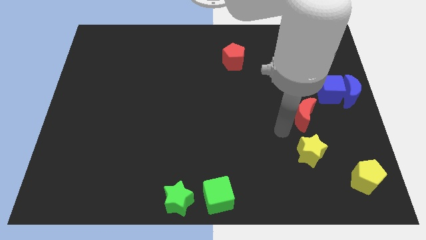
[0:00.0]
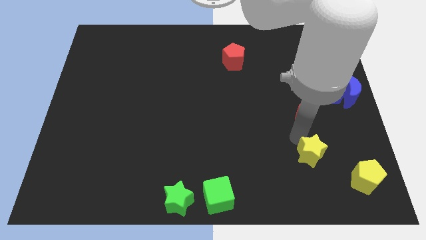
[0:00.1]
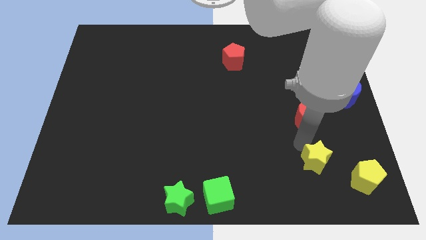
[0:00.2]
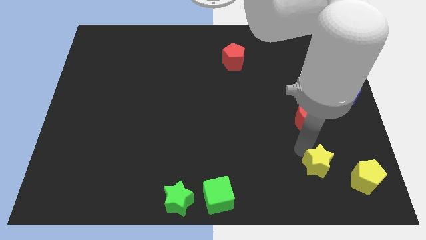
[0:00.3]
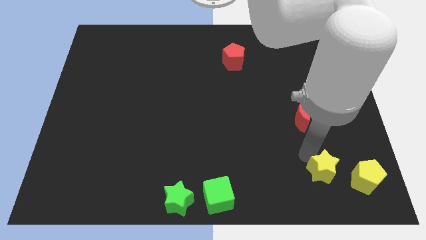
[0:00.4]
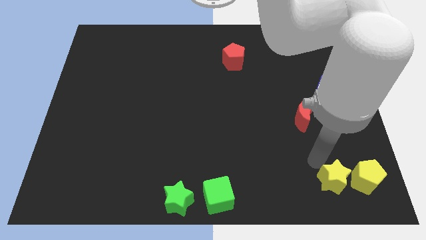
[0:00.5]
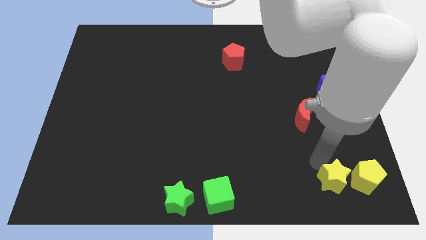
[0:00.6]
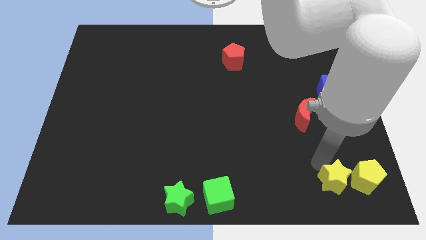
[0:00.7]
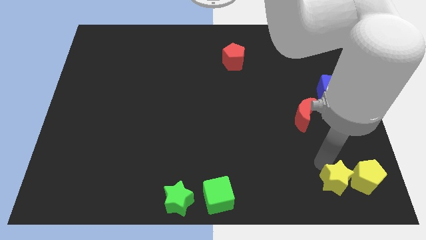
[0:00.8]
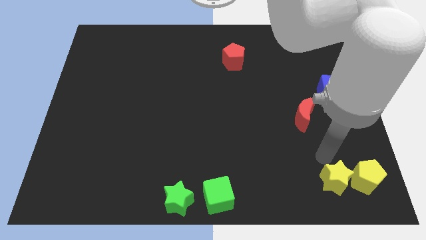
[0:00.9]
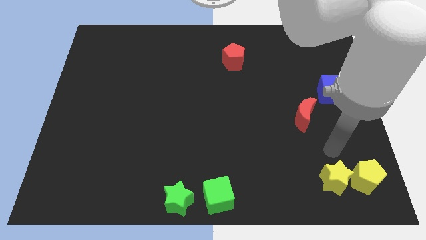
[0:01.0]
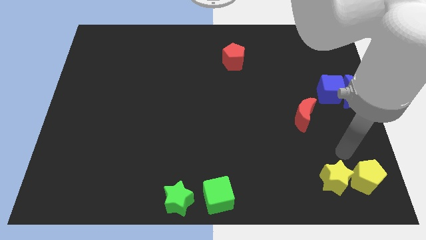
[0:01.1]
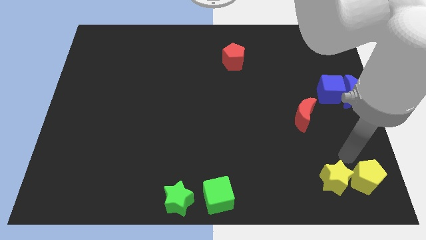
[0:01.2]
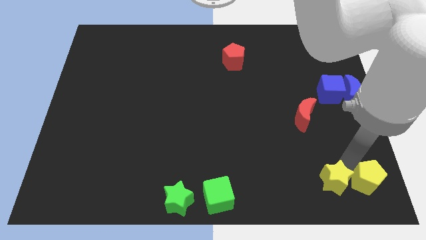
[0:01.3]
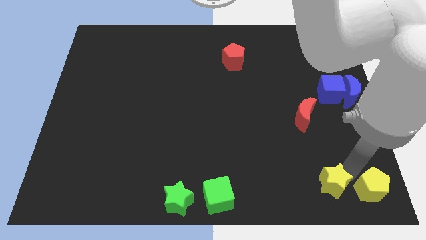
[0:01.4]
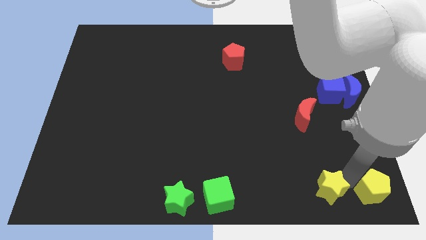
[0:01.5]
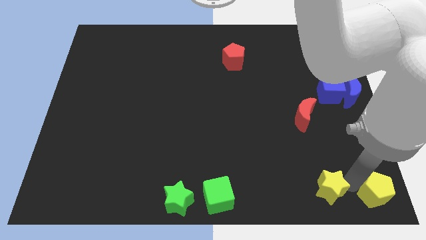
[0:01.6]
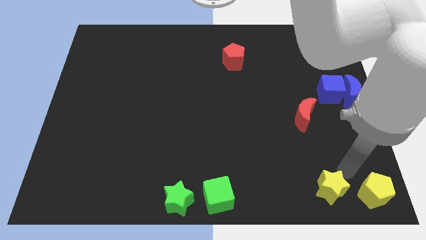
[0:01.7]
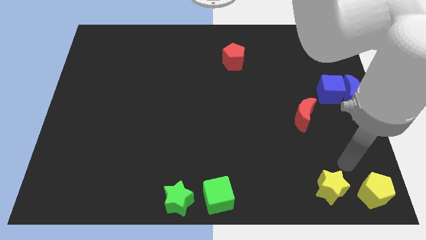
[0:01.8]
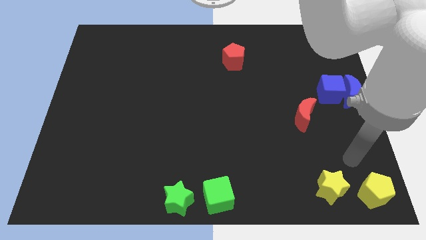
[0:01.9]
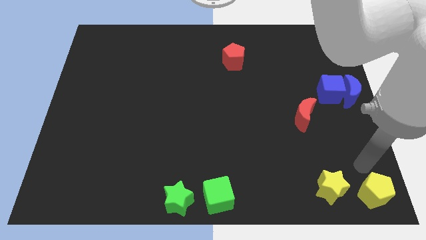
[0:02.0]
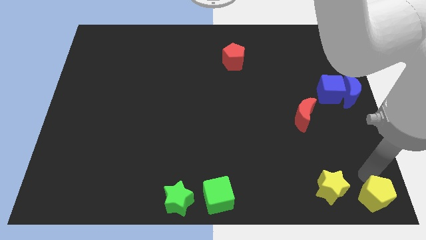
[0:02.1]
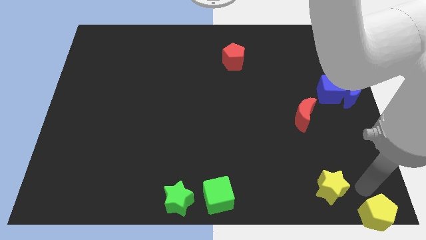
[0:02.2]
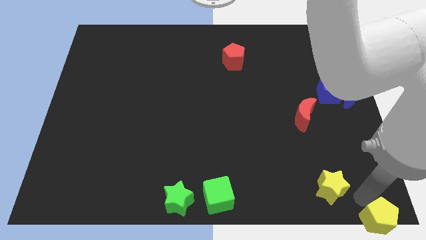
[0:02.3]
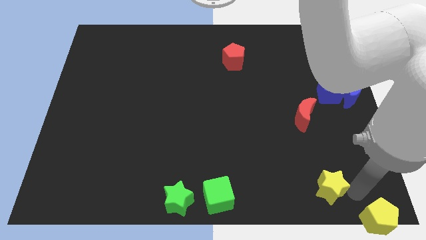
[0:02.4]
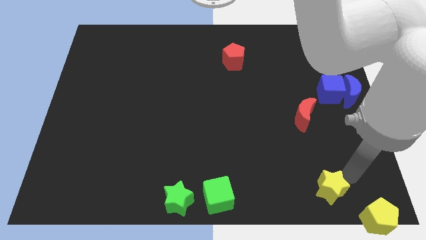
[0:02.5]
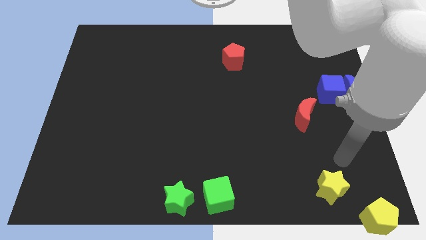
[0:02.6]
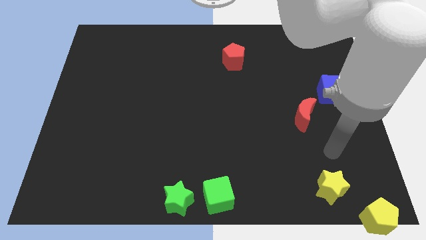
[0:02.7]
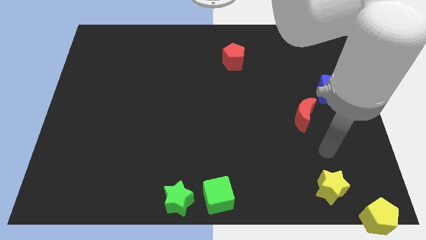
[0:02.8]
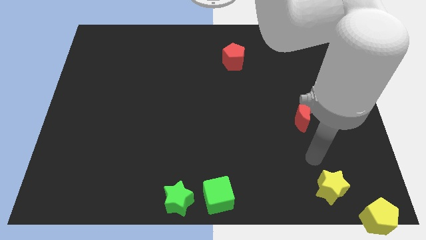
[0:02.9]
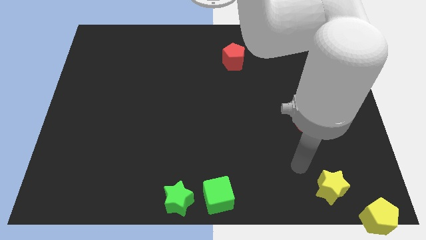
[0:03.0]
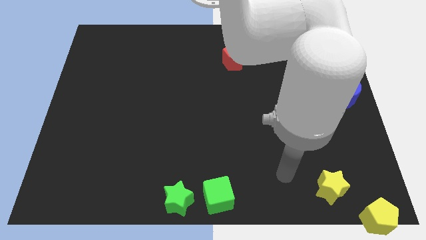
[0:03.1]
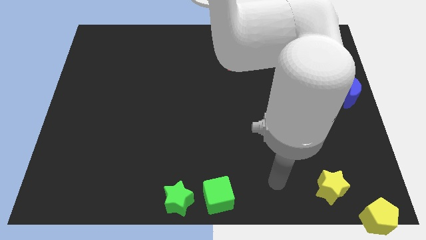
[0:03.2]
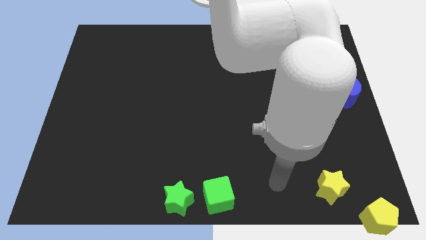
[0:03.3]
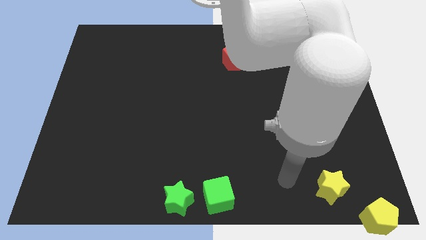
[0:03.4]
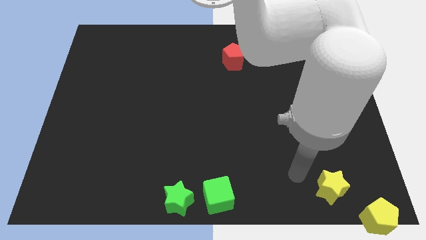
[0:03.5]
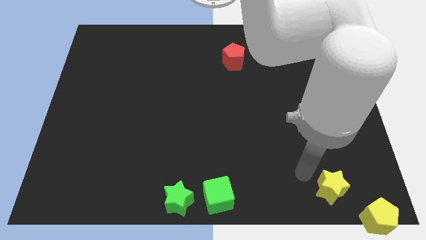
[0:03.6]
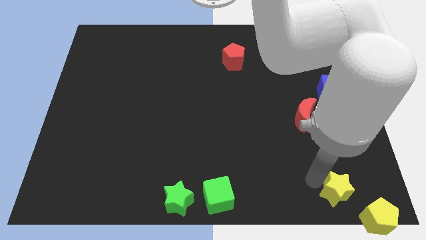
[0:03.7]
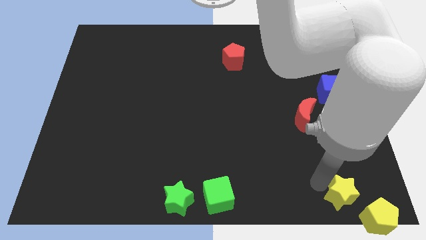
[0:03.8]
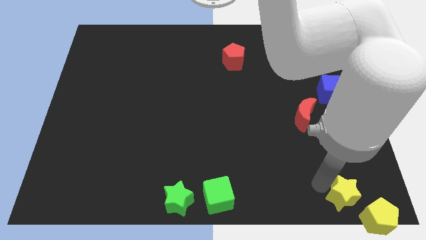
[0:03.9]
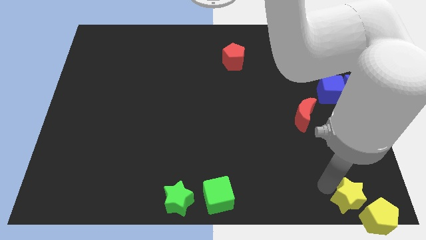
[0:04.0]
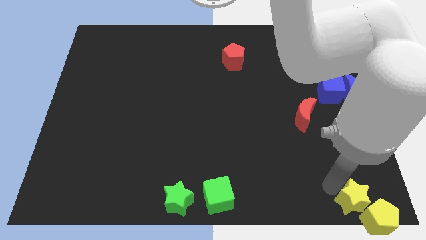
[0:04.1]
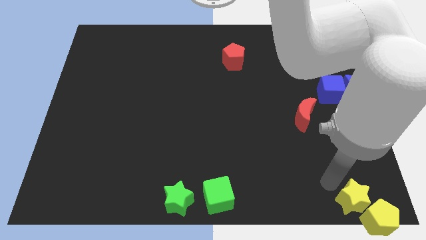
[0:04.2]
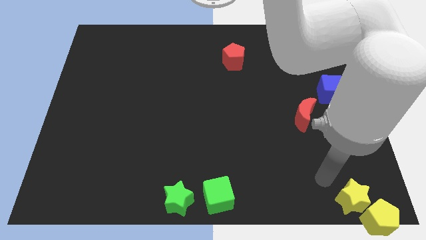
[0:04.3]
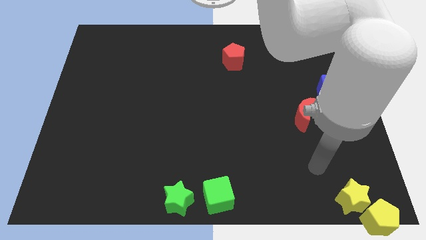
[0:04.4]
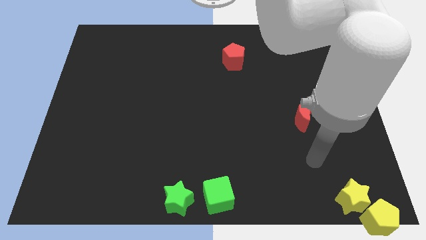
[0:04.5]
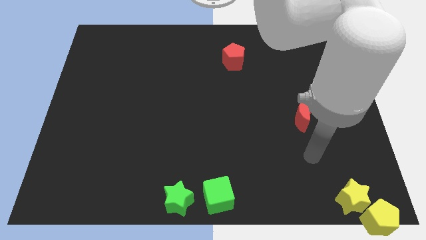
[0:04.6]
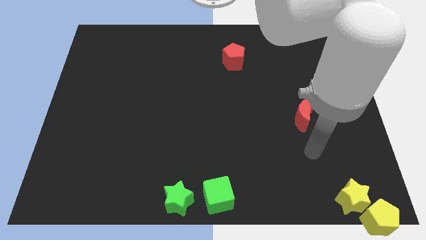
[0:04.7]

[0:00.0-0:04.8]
move yellow star and yellow pentagon to the bottom right

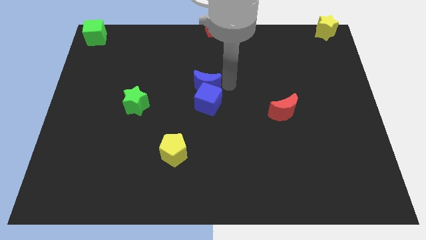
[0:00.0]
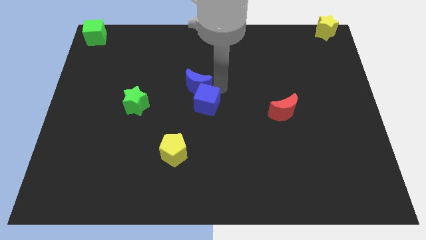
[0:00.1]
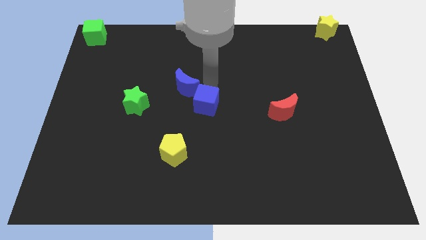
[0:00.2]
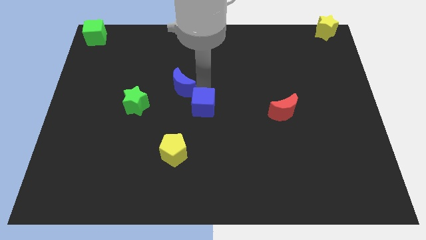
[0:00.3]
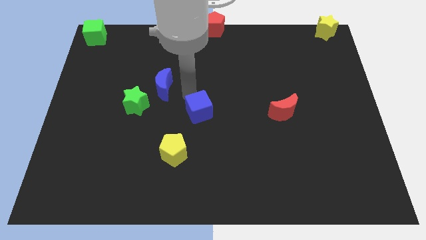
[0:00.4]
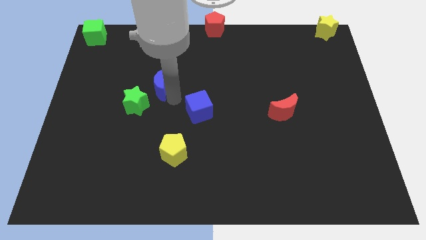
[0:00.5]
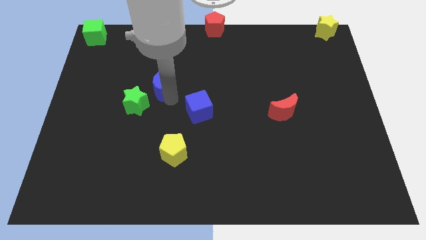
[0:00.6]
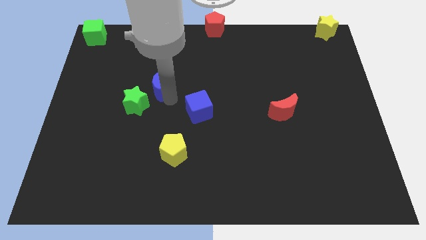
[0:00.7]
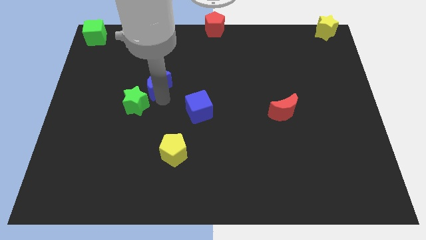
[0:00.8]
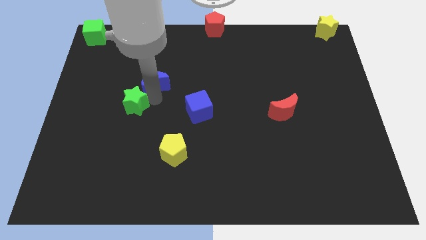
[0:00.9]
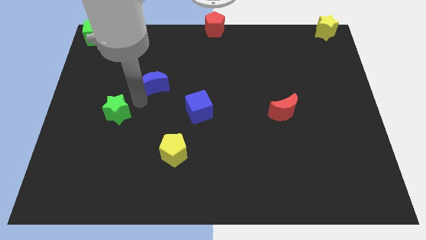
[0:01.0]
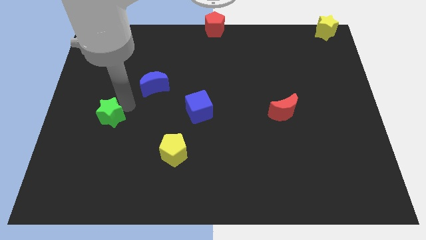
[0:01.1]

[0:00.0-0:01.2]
separate the blue moon and blue cube

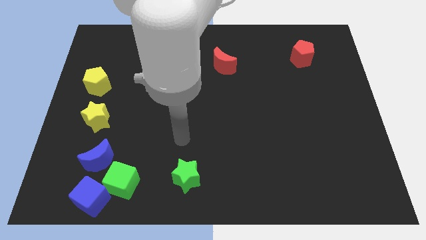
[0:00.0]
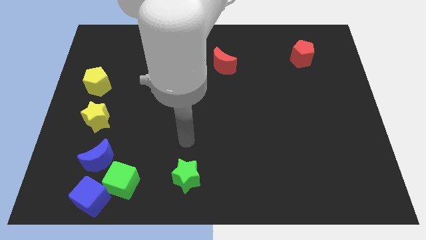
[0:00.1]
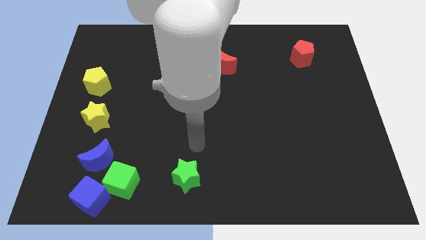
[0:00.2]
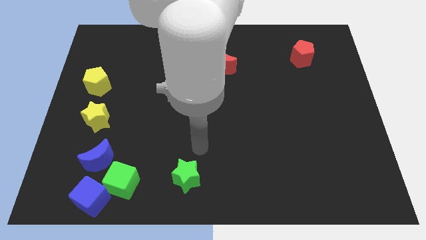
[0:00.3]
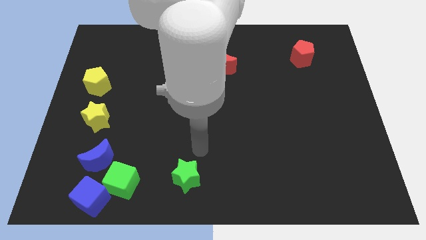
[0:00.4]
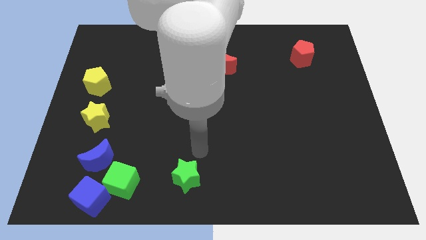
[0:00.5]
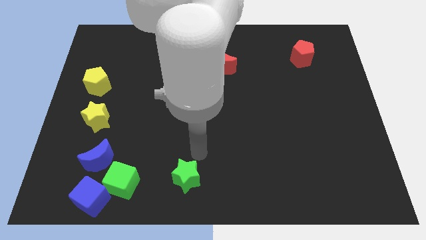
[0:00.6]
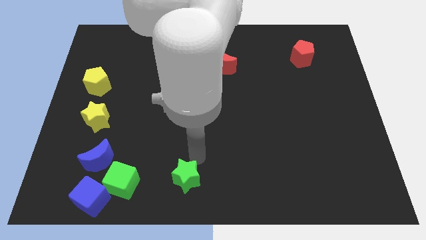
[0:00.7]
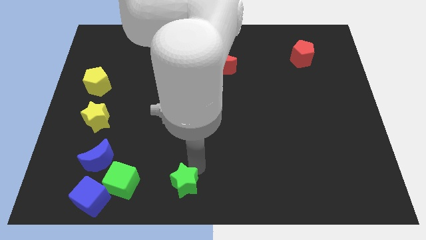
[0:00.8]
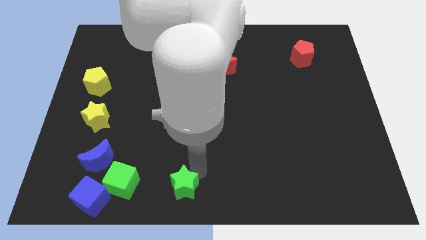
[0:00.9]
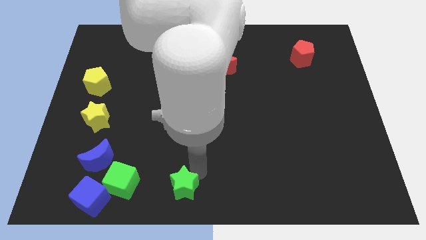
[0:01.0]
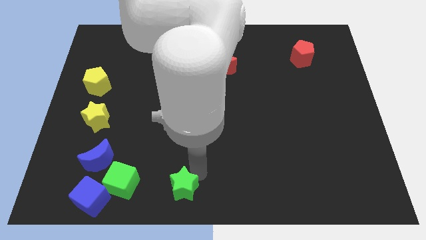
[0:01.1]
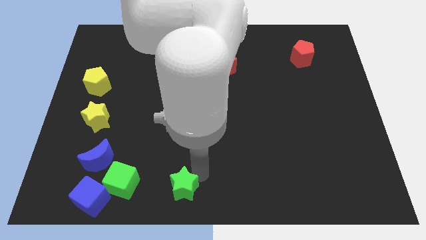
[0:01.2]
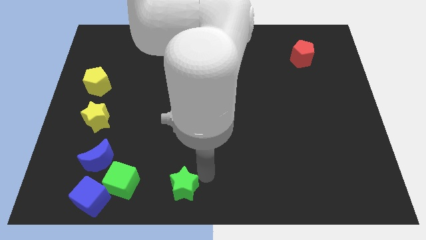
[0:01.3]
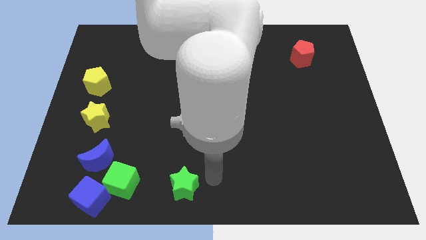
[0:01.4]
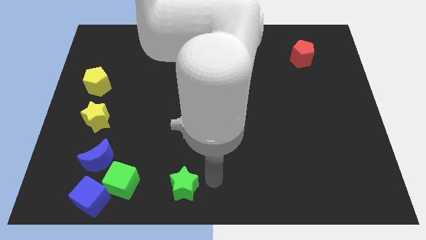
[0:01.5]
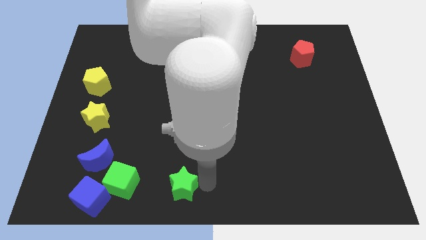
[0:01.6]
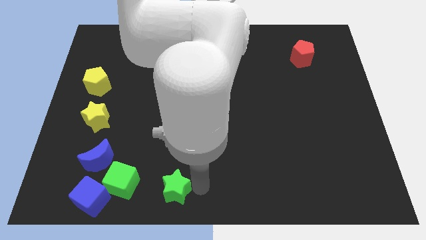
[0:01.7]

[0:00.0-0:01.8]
move green star slightly down

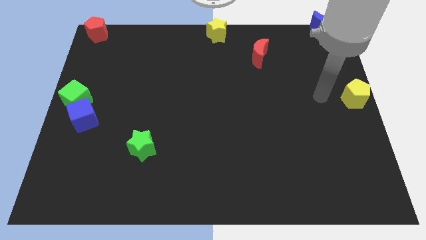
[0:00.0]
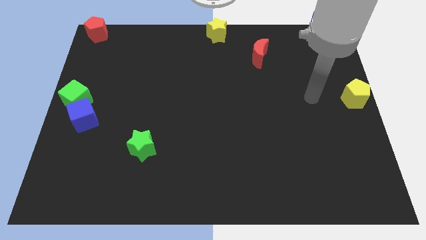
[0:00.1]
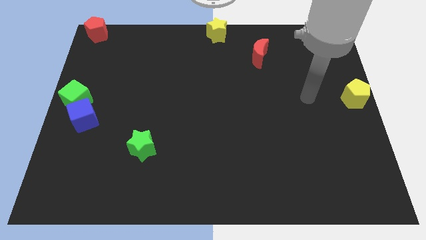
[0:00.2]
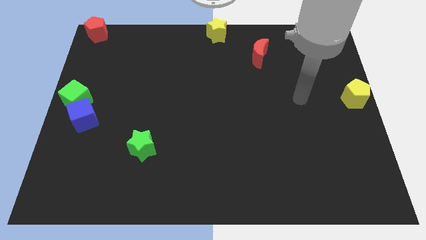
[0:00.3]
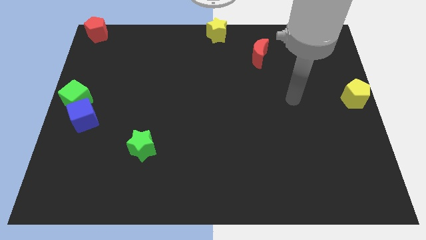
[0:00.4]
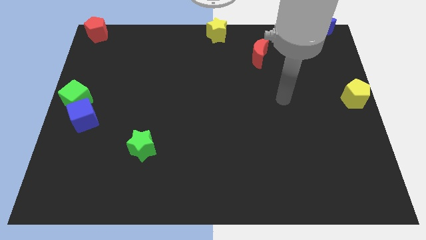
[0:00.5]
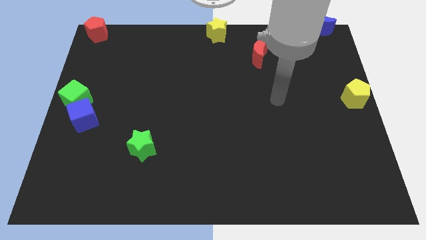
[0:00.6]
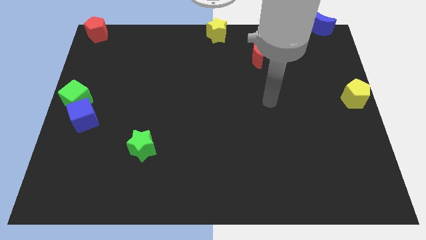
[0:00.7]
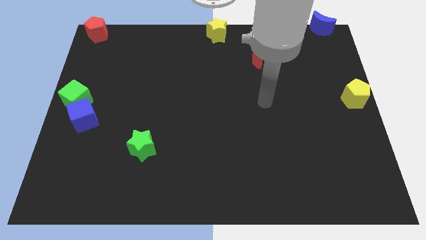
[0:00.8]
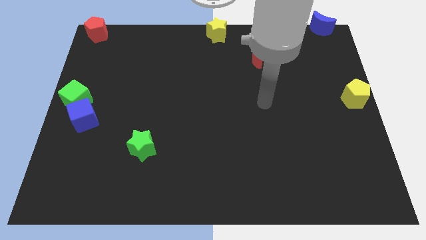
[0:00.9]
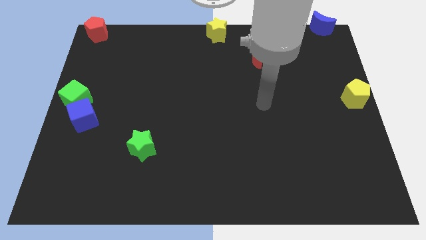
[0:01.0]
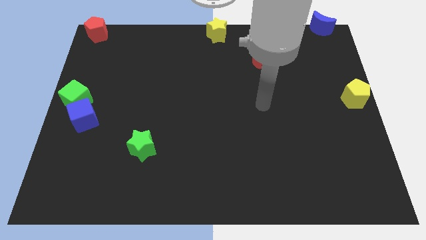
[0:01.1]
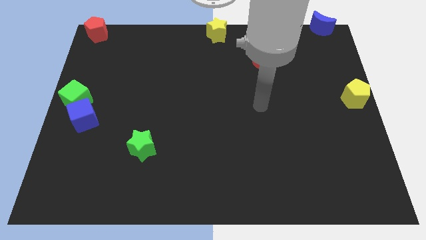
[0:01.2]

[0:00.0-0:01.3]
move your arm away from the yellow pentagon
